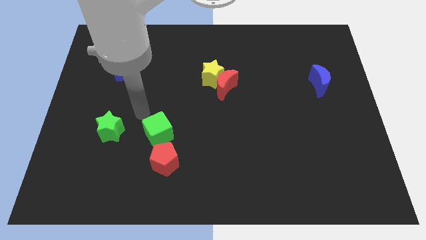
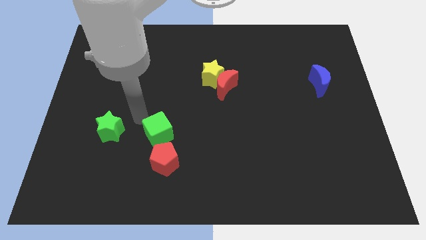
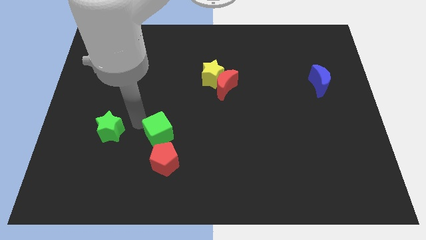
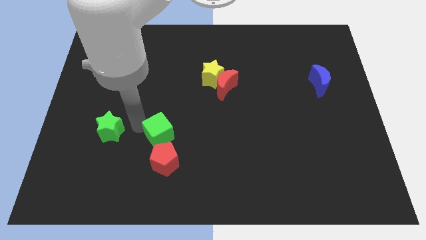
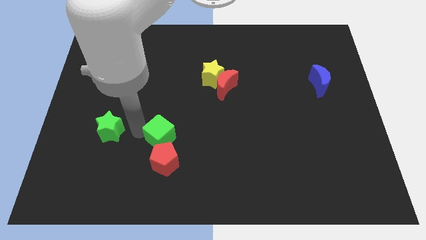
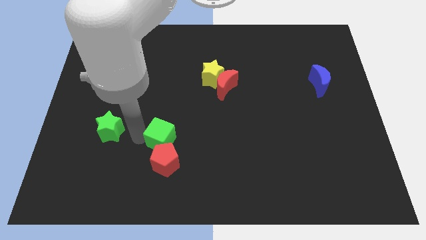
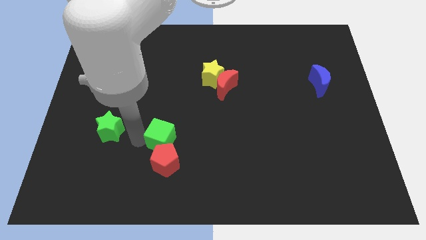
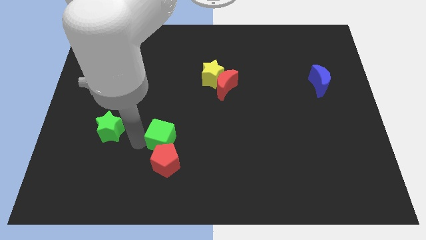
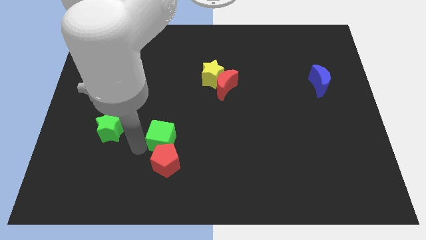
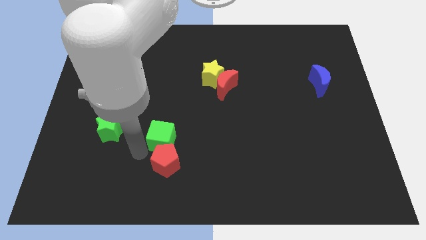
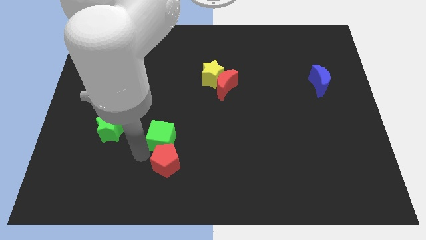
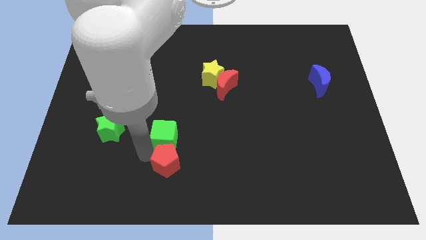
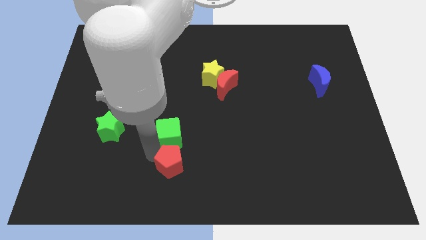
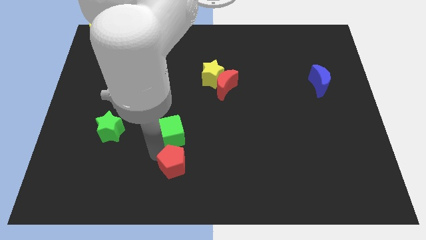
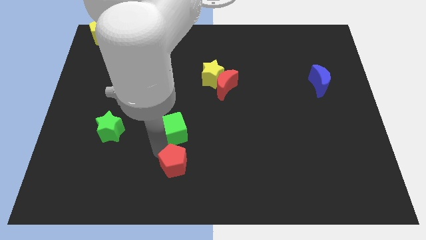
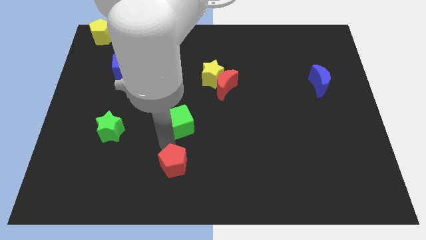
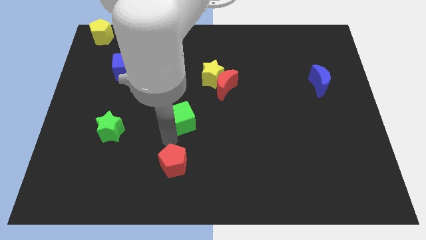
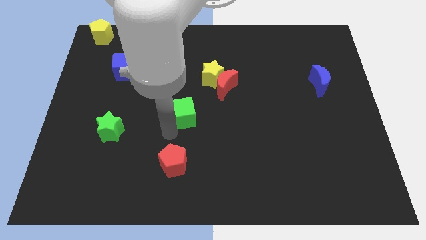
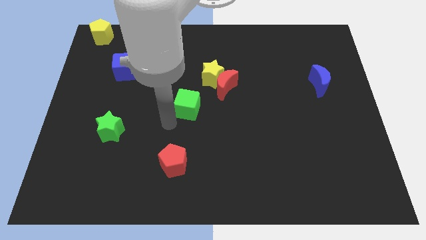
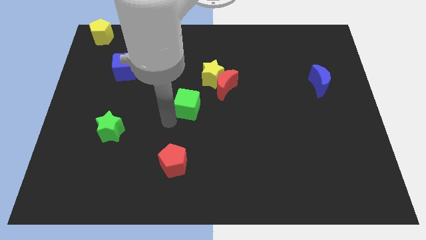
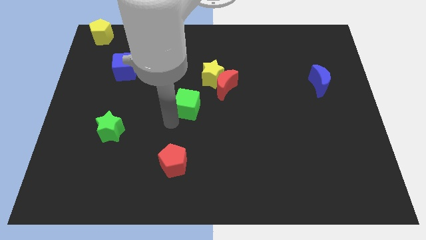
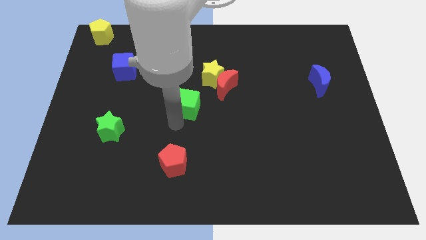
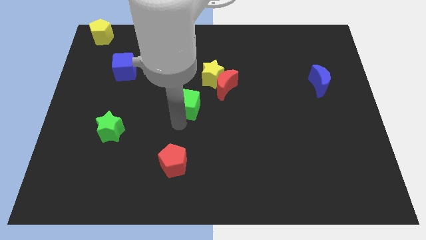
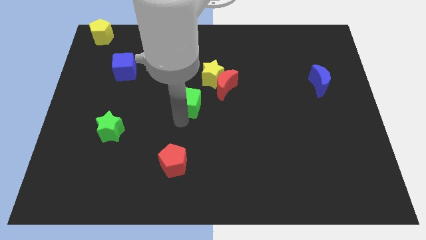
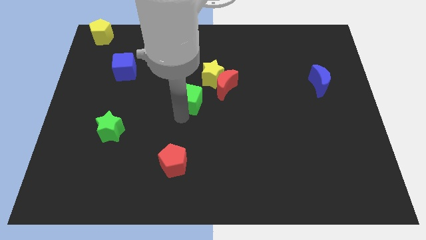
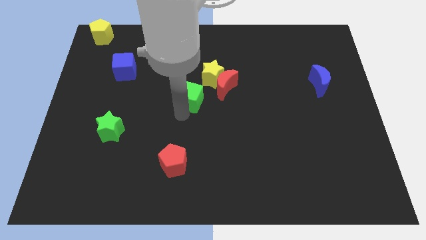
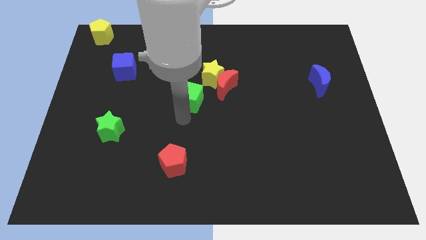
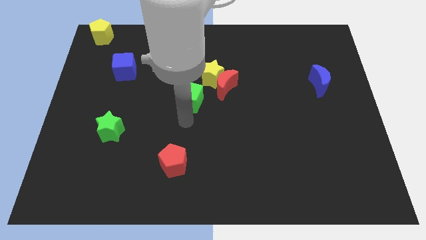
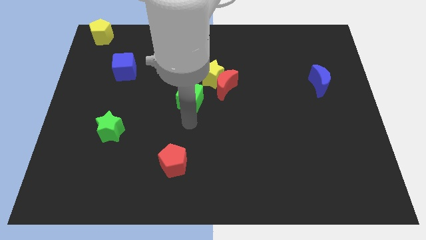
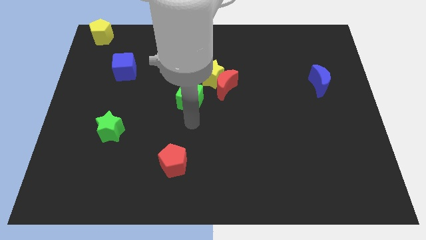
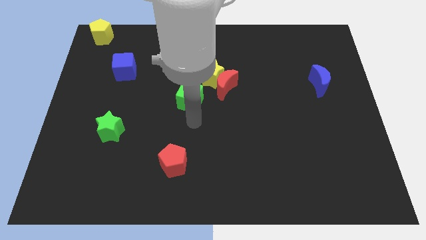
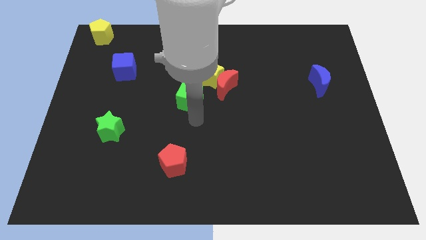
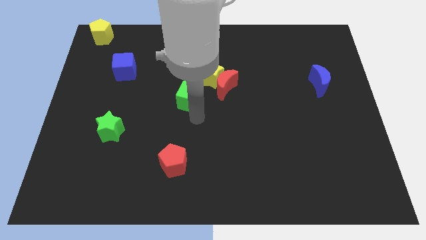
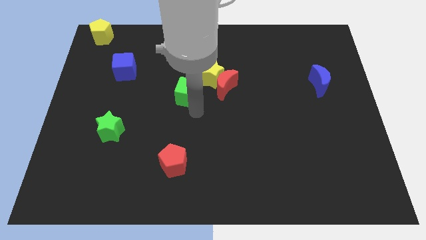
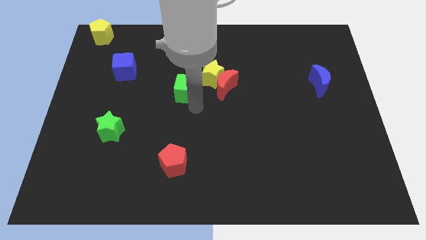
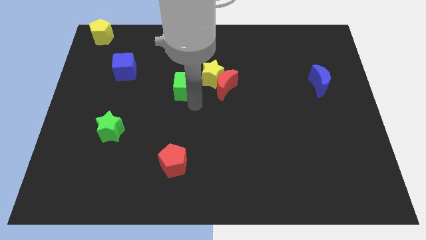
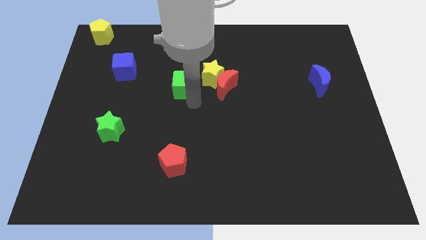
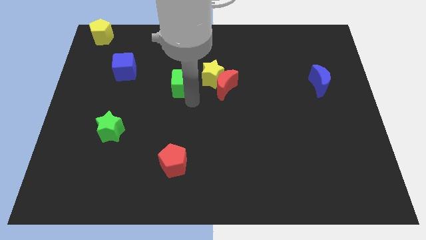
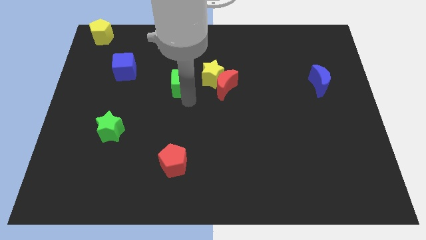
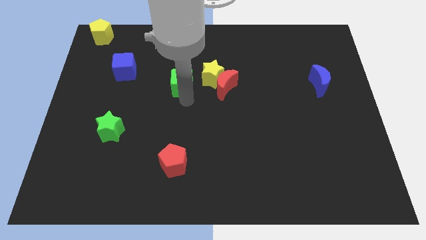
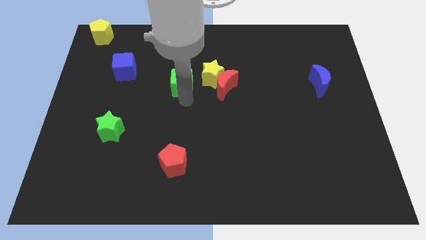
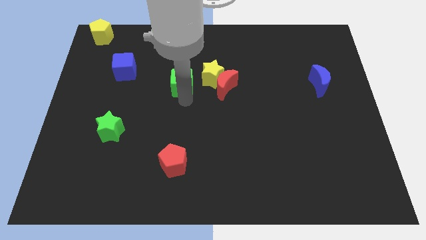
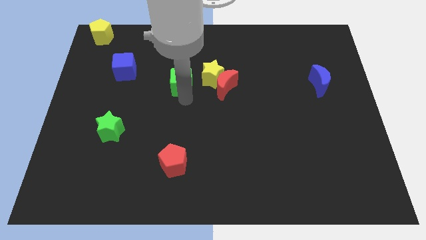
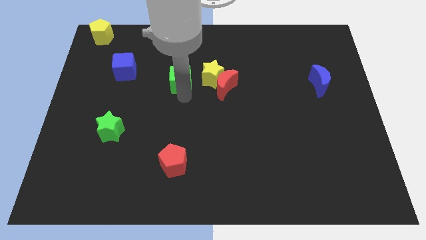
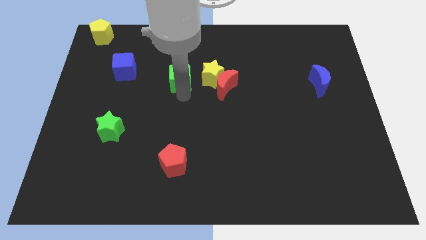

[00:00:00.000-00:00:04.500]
push the green cube to the left side of the yellow star

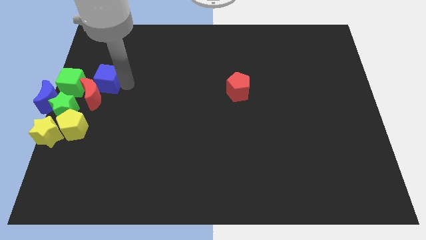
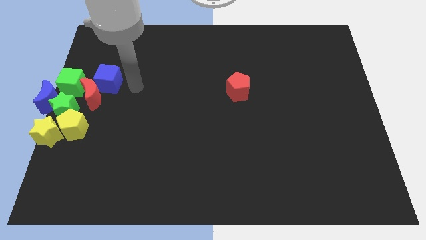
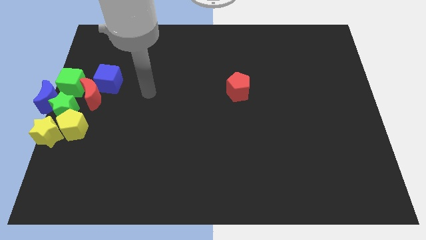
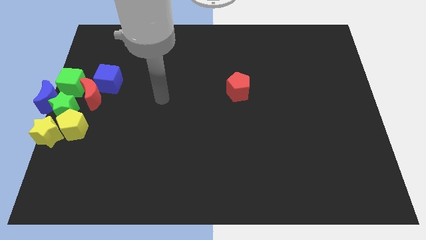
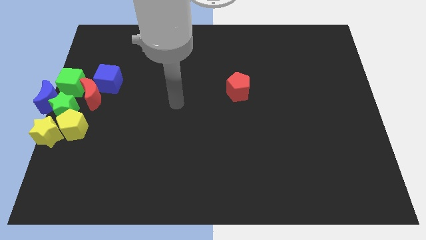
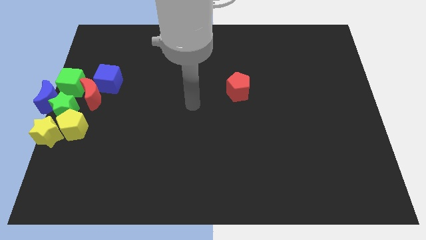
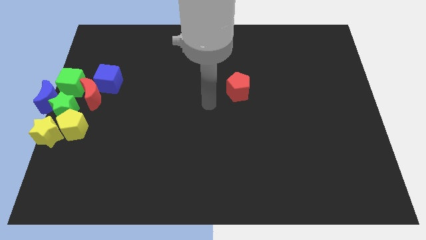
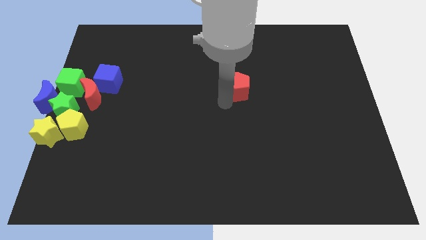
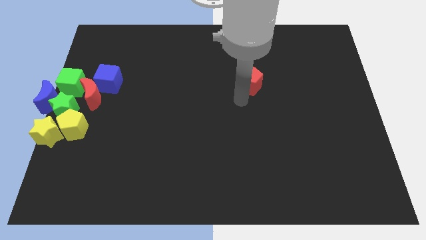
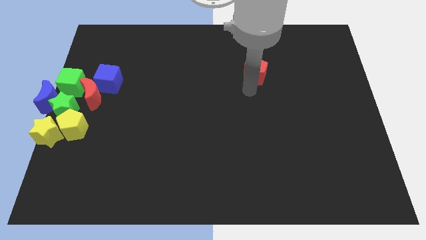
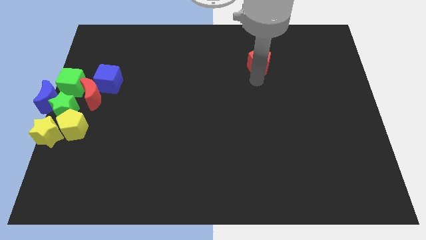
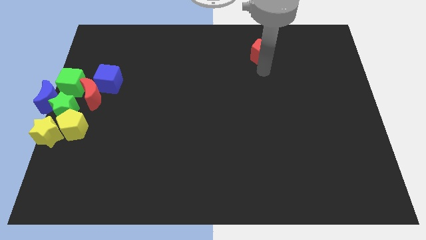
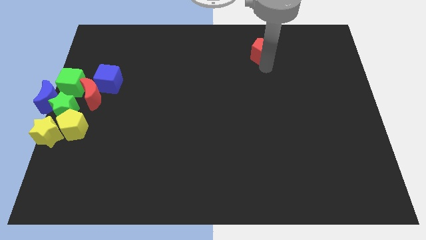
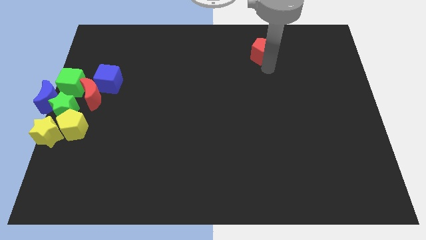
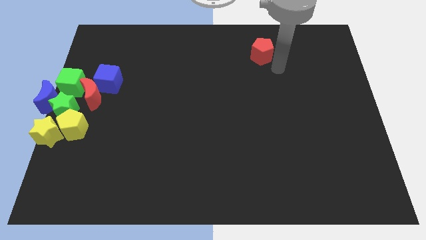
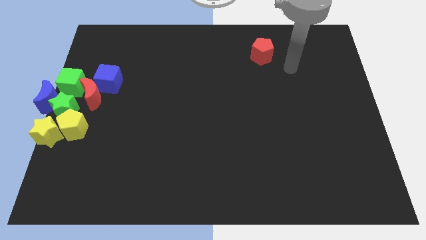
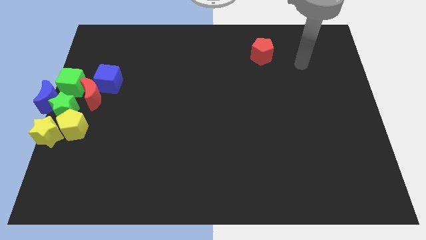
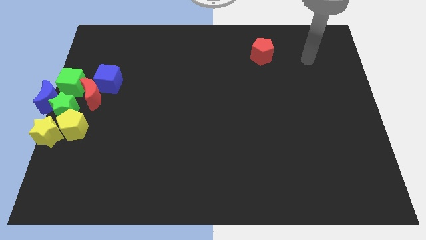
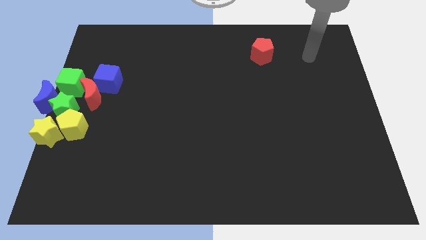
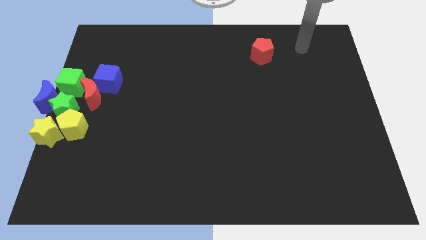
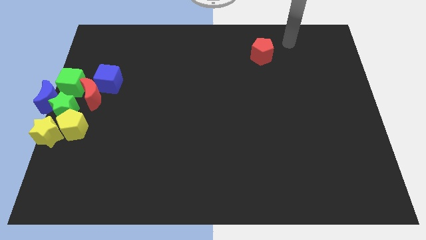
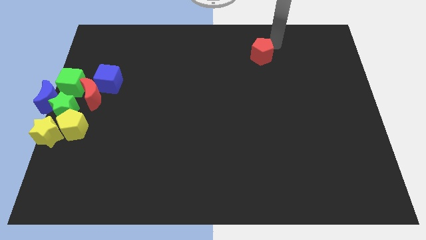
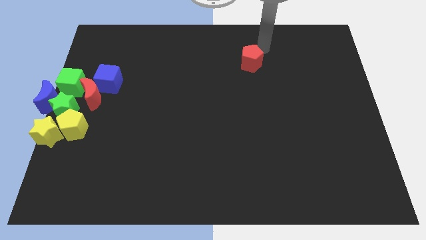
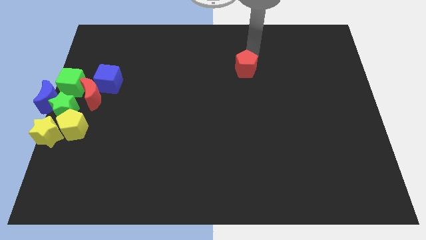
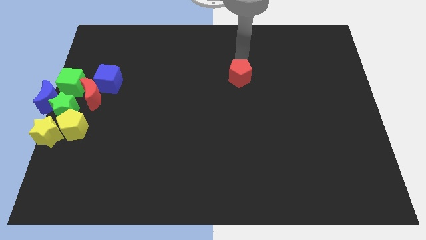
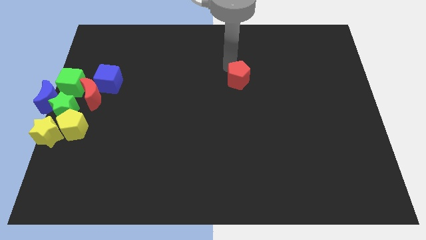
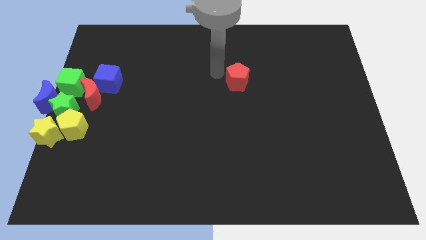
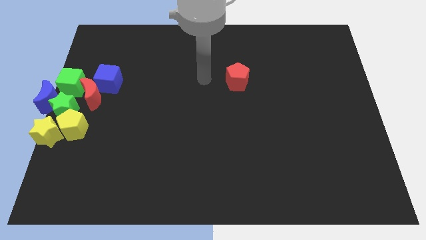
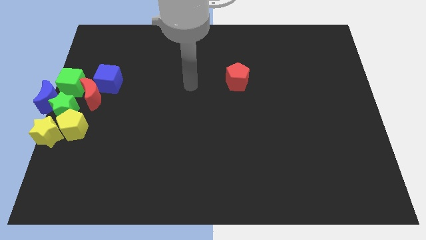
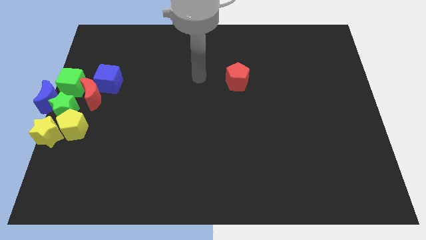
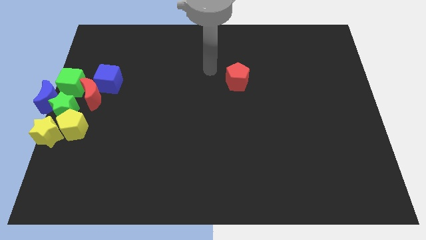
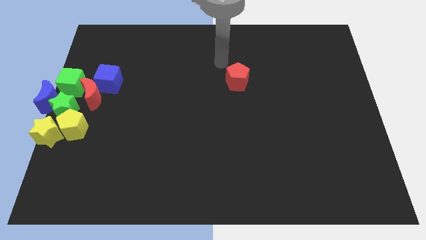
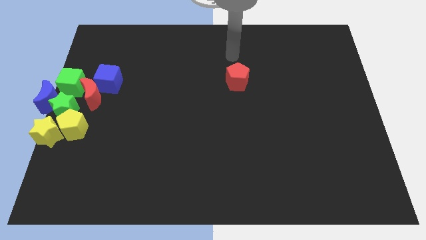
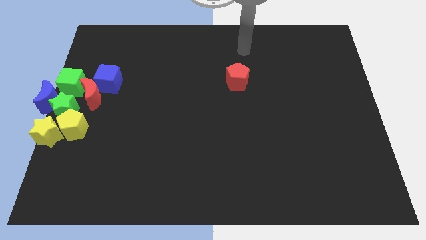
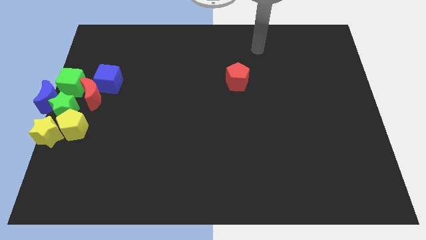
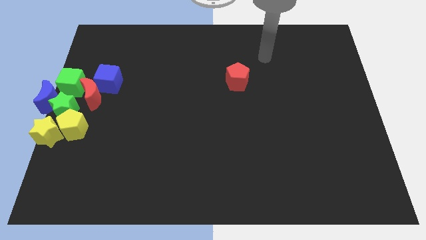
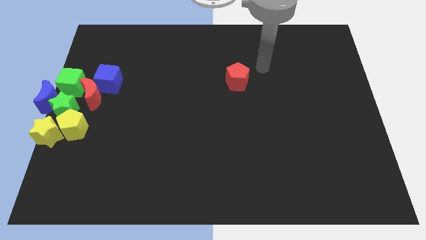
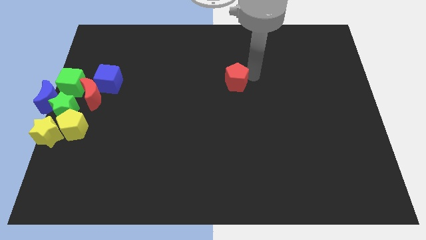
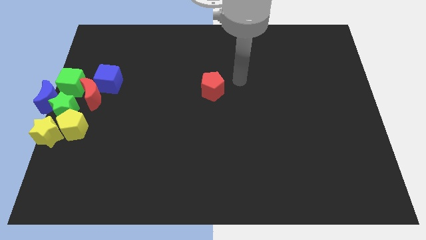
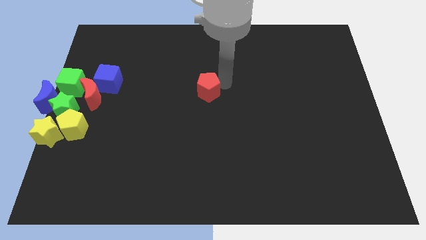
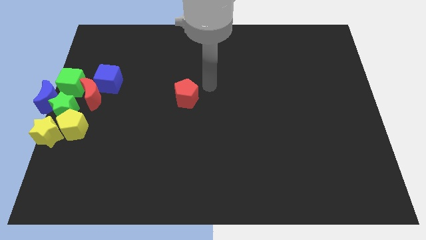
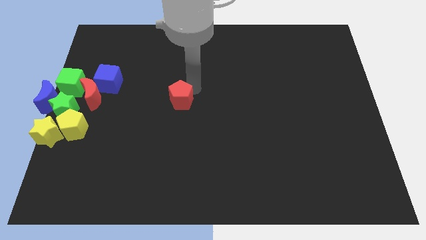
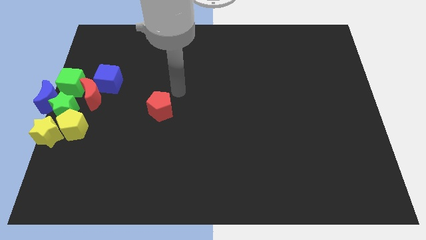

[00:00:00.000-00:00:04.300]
move the red pentagon towards the group of blocks

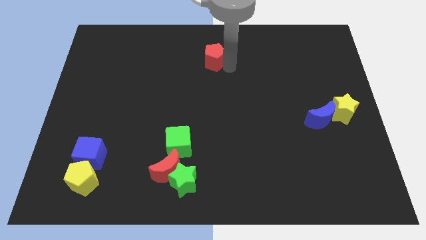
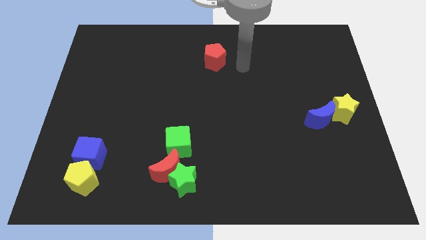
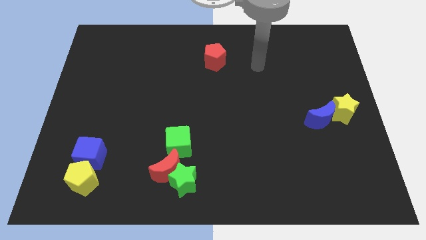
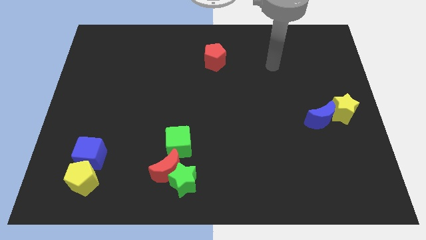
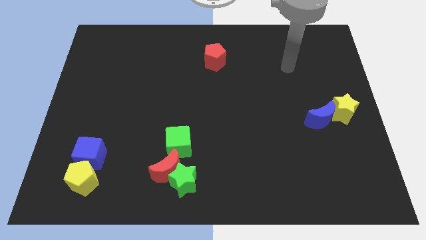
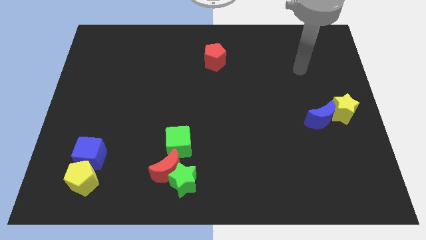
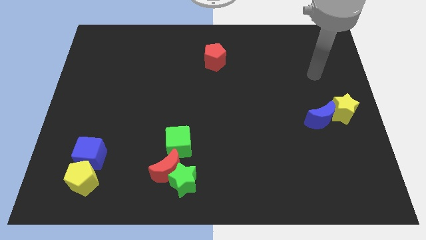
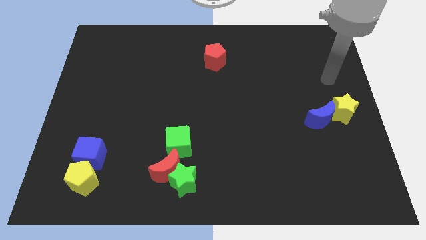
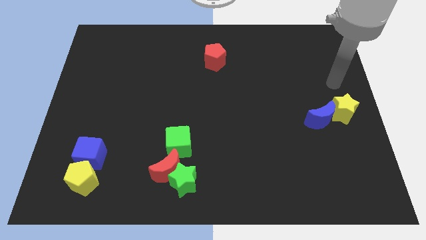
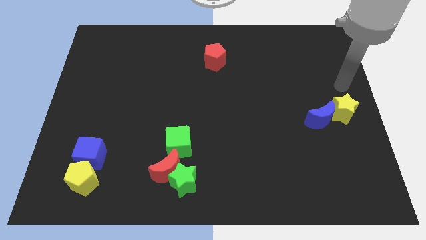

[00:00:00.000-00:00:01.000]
move arm away from red pentagon
